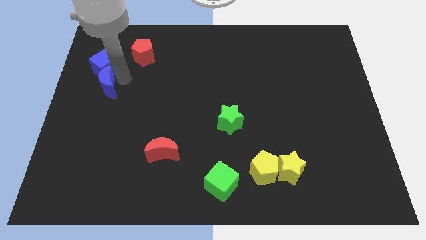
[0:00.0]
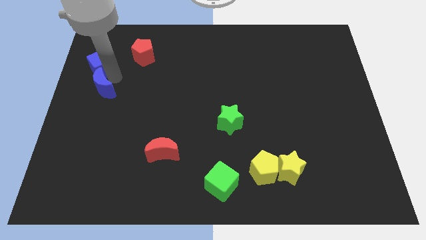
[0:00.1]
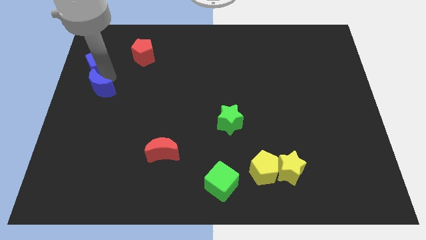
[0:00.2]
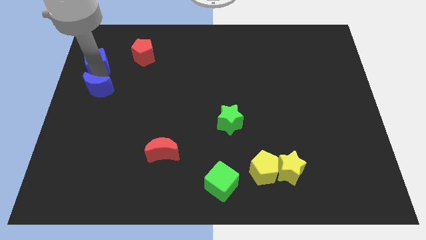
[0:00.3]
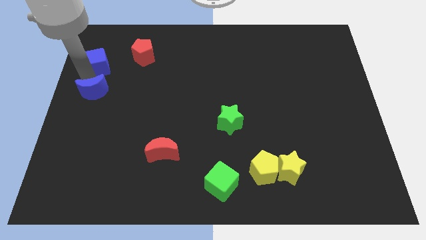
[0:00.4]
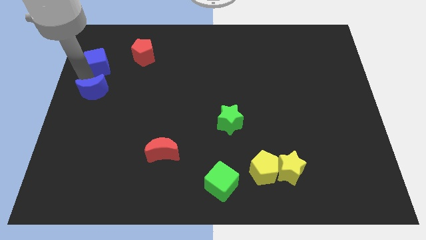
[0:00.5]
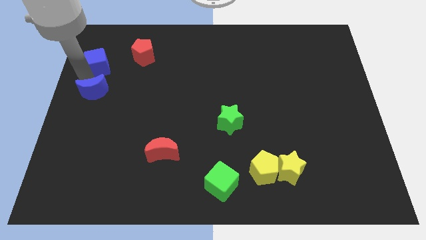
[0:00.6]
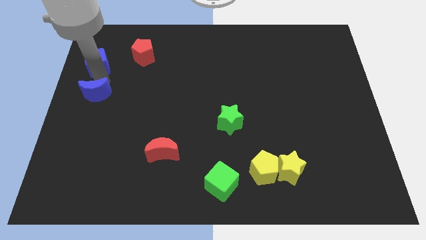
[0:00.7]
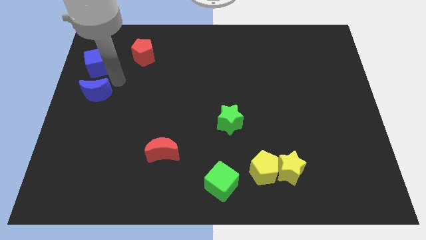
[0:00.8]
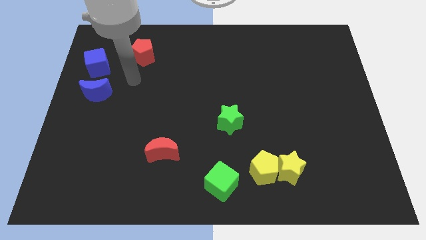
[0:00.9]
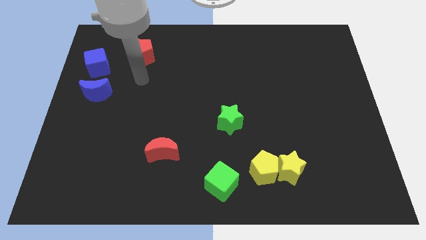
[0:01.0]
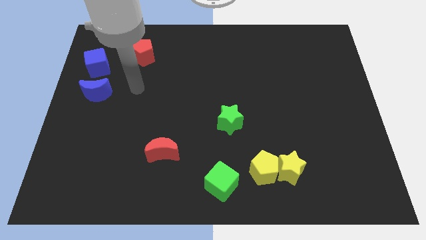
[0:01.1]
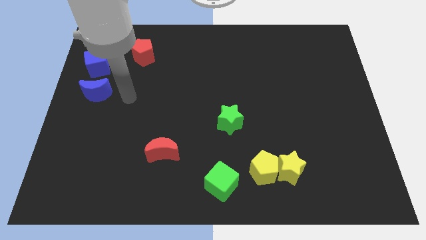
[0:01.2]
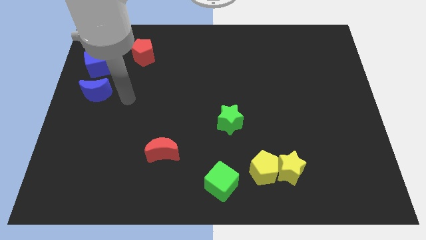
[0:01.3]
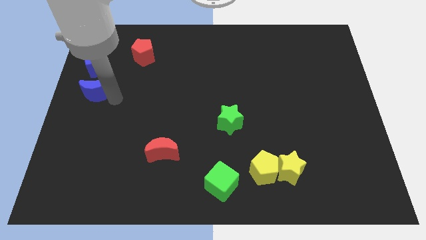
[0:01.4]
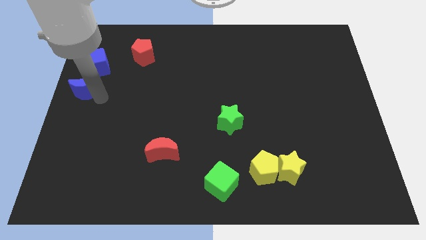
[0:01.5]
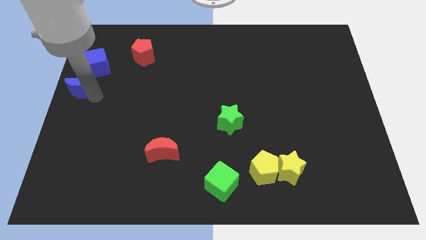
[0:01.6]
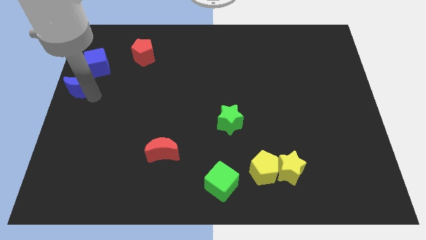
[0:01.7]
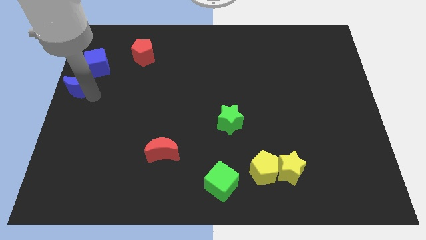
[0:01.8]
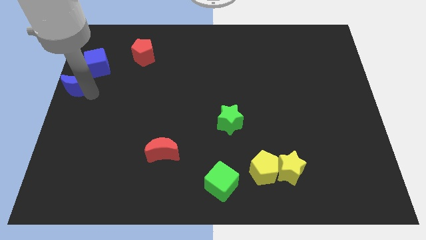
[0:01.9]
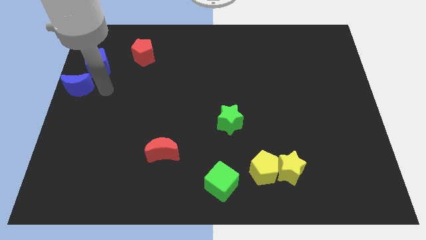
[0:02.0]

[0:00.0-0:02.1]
move the blue moon towards the left side of the board

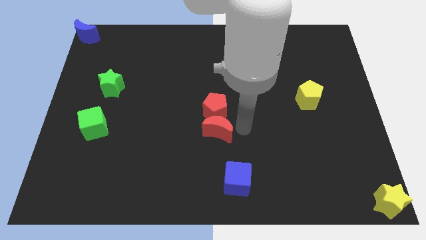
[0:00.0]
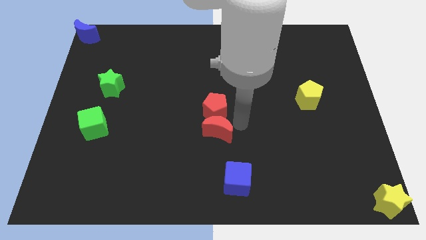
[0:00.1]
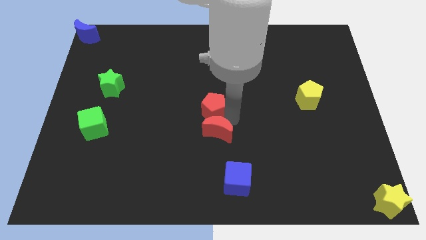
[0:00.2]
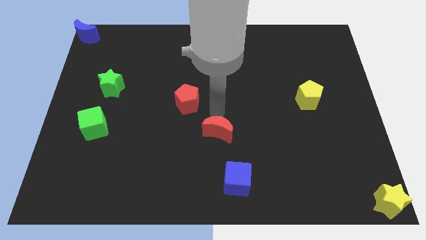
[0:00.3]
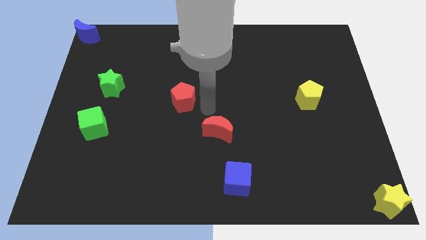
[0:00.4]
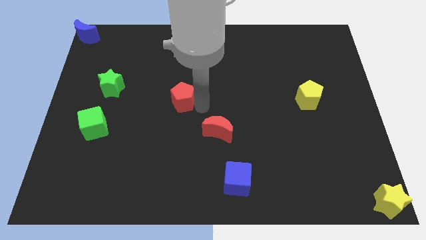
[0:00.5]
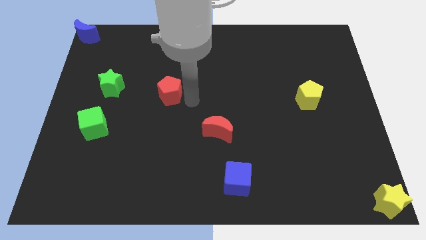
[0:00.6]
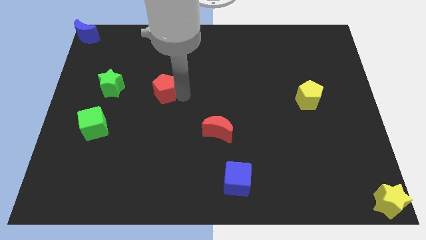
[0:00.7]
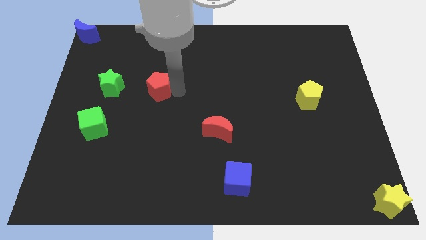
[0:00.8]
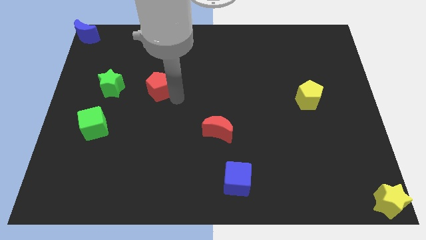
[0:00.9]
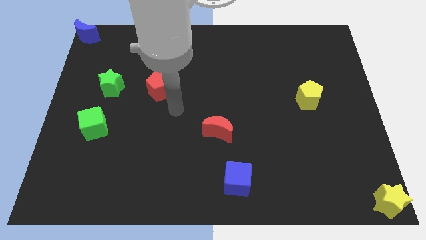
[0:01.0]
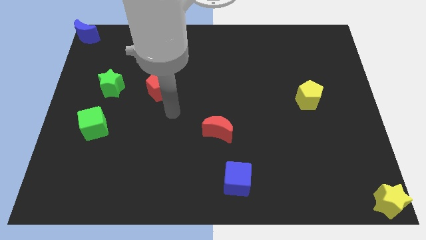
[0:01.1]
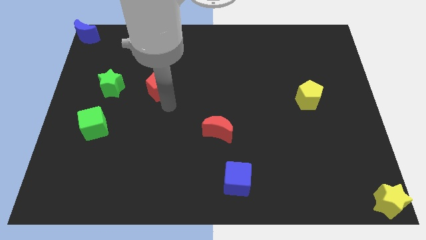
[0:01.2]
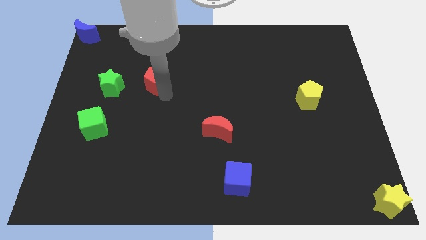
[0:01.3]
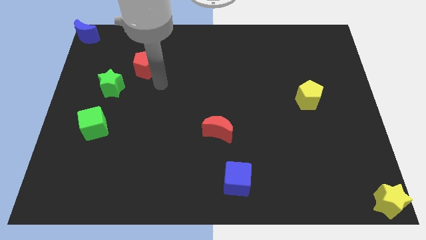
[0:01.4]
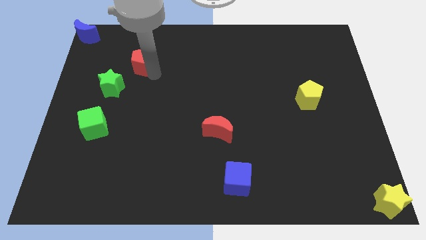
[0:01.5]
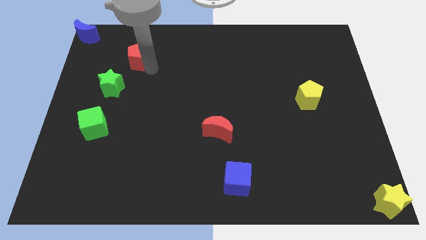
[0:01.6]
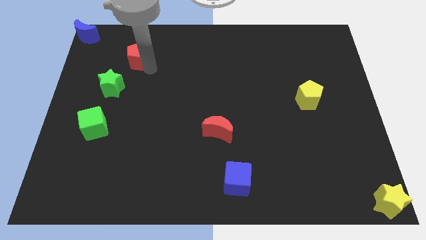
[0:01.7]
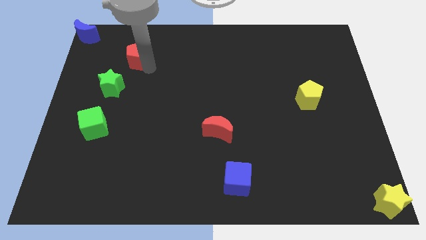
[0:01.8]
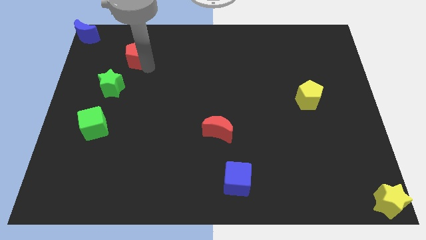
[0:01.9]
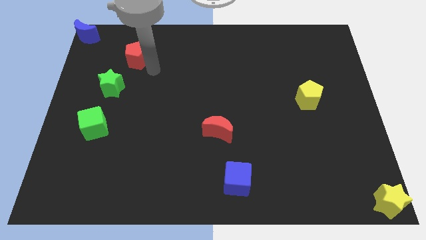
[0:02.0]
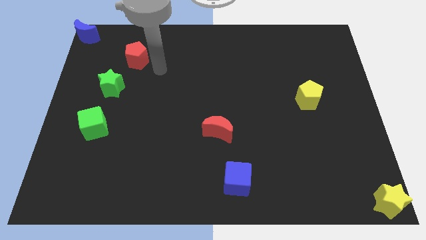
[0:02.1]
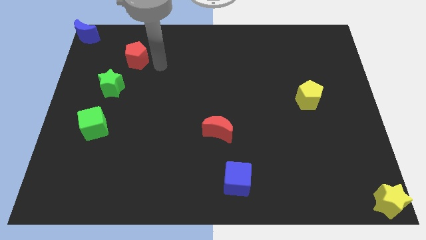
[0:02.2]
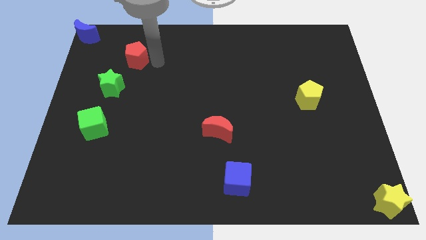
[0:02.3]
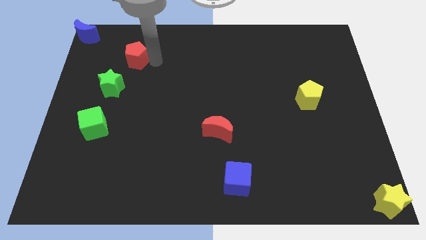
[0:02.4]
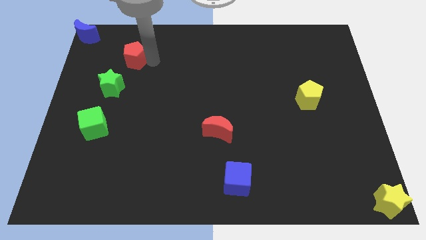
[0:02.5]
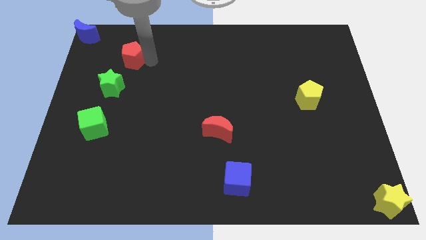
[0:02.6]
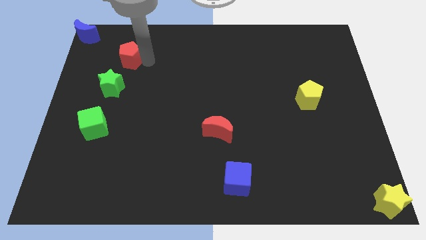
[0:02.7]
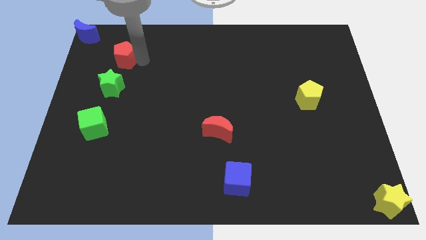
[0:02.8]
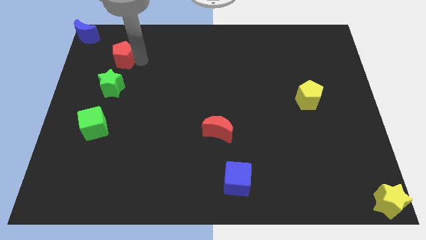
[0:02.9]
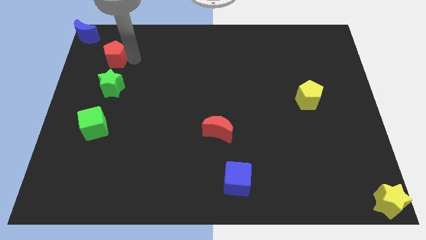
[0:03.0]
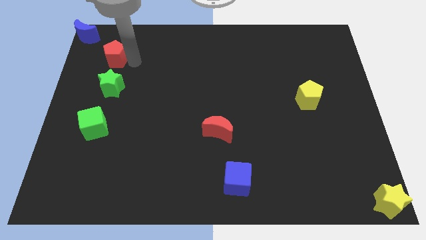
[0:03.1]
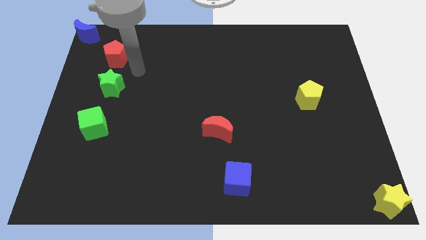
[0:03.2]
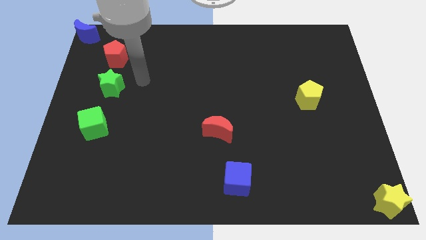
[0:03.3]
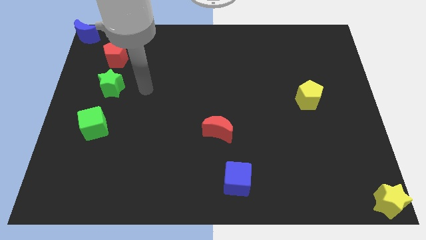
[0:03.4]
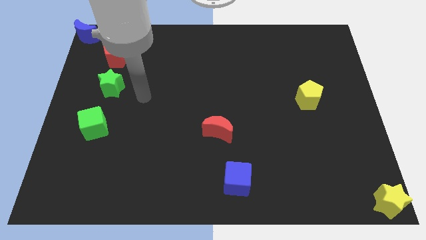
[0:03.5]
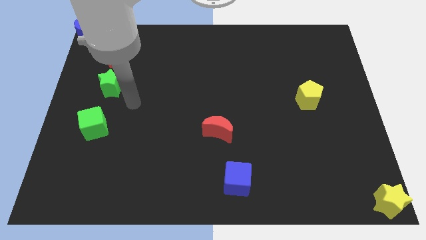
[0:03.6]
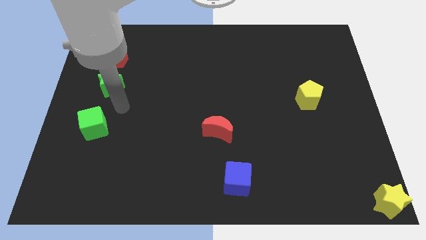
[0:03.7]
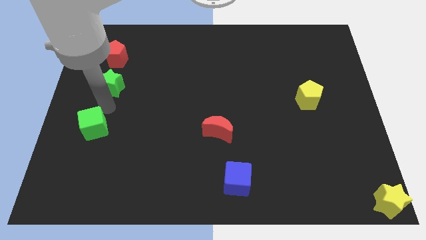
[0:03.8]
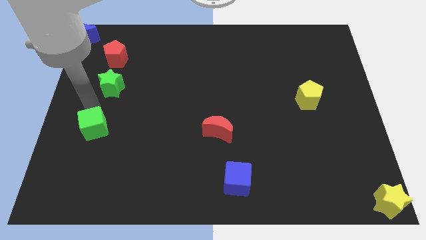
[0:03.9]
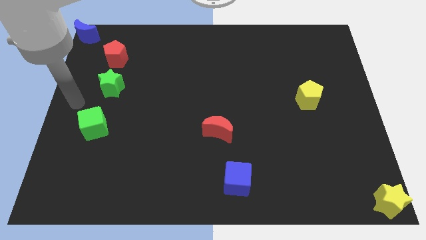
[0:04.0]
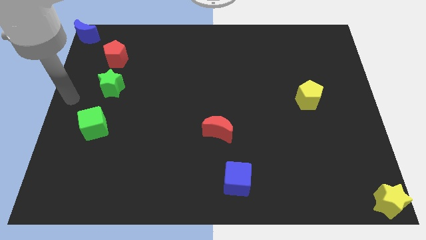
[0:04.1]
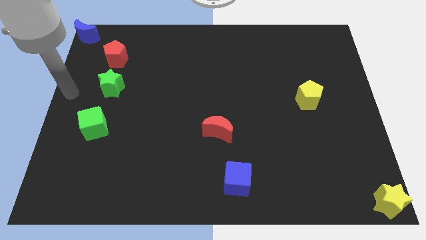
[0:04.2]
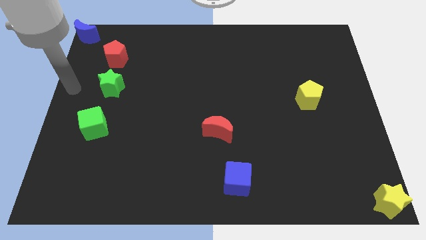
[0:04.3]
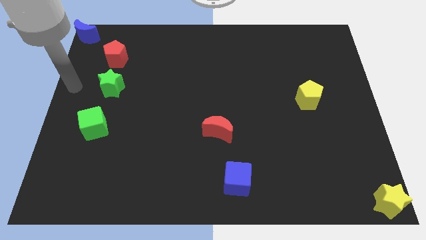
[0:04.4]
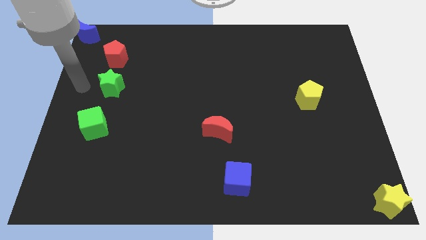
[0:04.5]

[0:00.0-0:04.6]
place the red pentagon below the blue moon

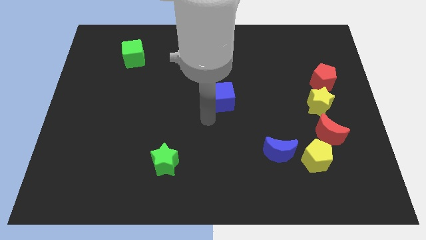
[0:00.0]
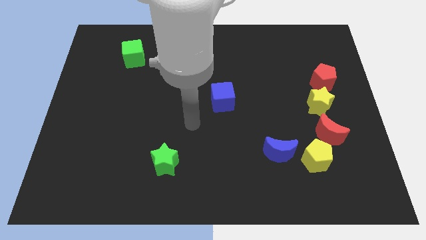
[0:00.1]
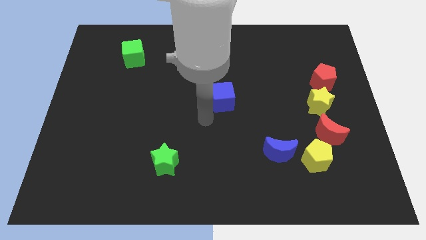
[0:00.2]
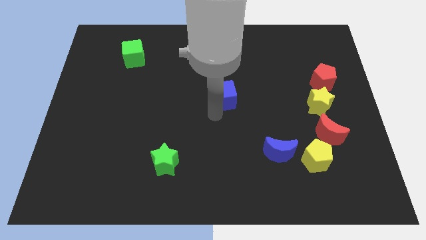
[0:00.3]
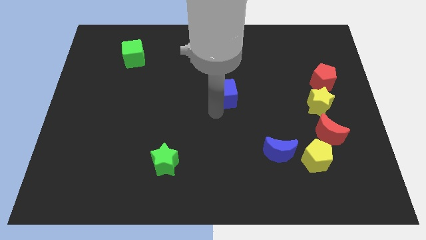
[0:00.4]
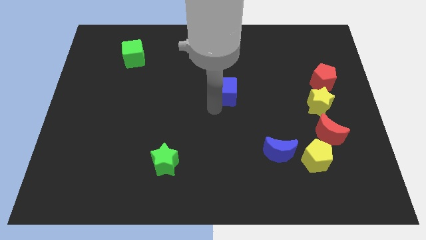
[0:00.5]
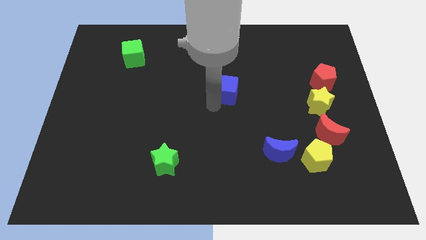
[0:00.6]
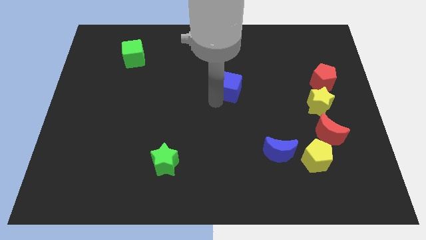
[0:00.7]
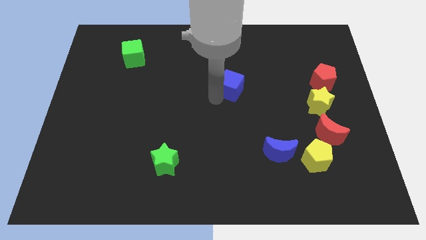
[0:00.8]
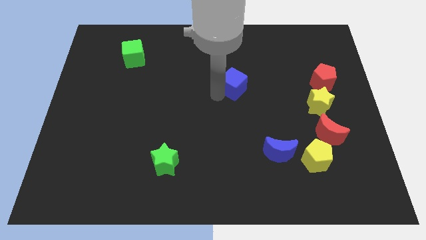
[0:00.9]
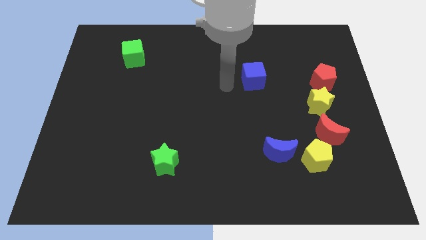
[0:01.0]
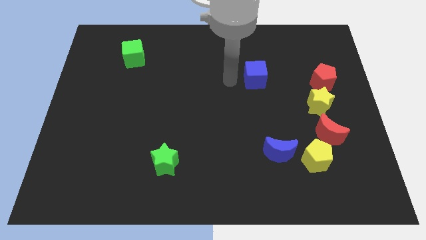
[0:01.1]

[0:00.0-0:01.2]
put the blue cube to the left of the red pentagon

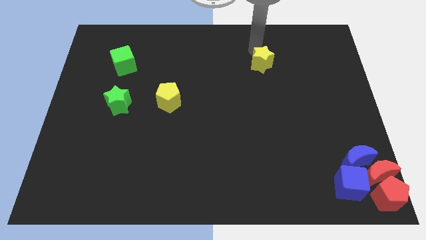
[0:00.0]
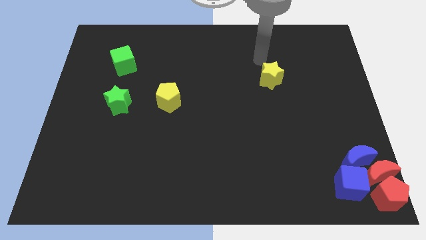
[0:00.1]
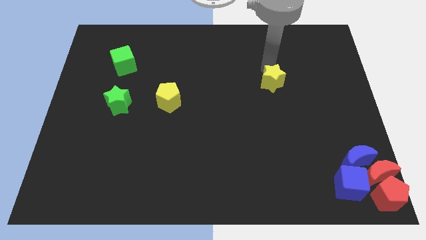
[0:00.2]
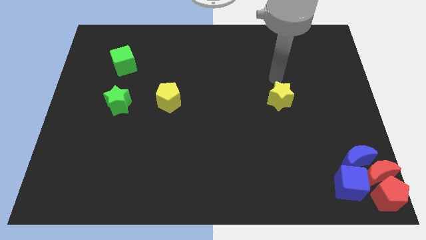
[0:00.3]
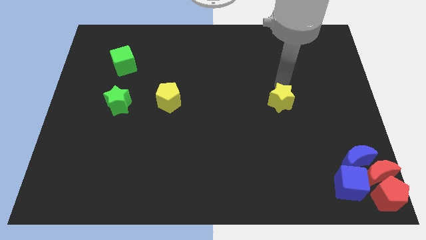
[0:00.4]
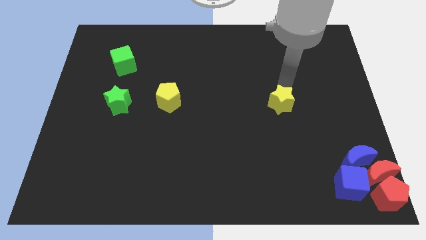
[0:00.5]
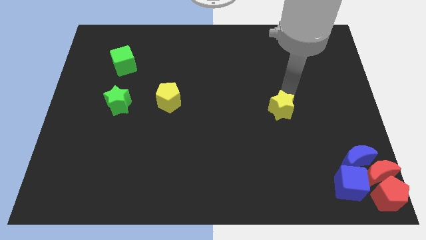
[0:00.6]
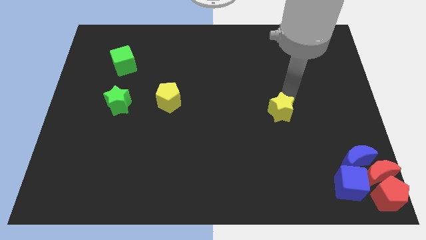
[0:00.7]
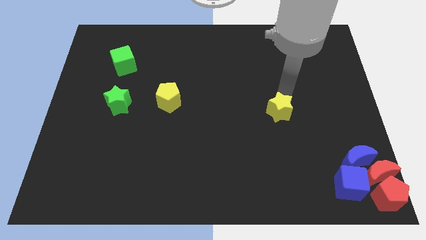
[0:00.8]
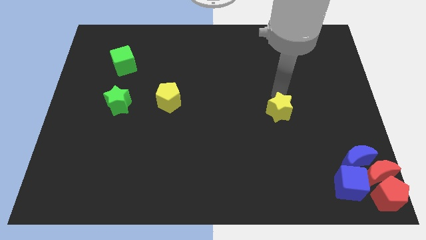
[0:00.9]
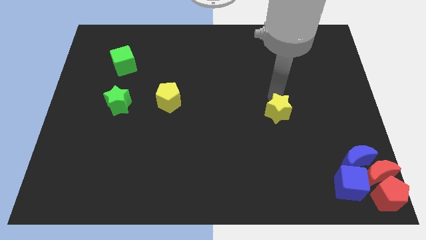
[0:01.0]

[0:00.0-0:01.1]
move the yellow star to the bottom of the board

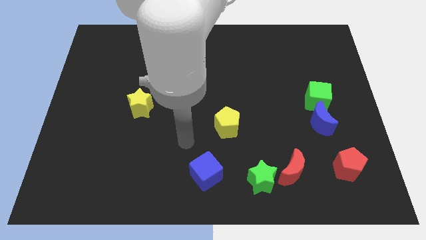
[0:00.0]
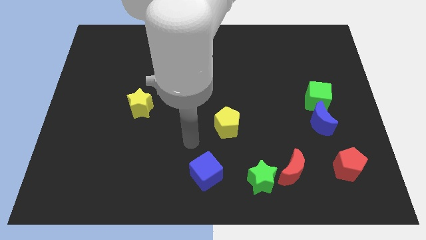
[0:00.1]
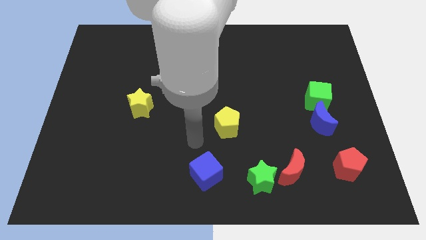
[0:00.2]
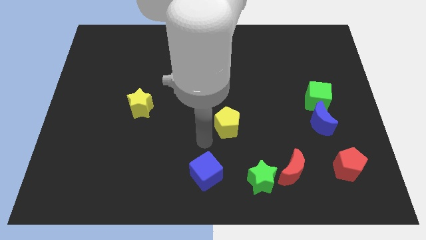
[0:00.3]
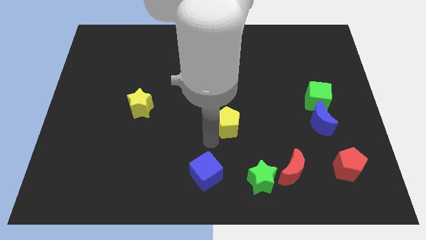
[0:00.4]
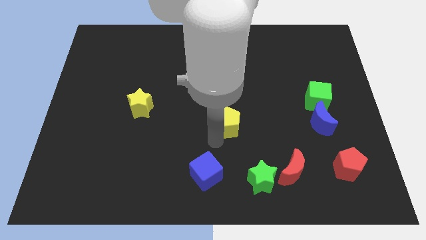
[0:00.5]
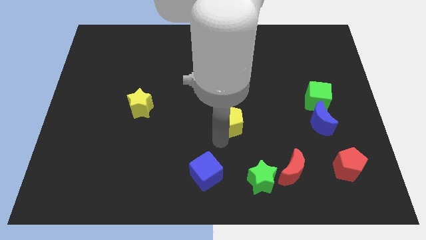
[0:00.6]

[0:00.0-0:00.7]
place your arm in between the yellow pentagon and blue cube
